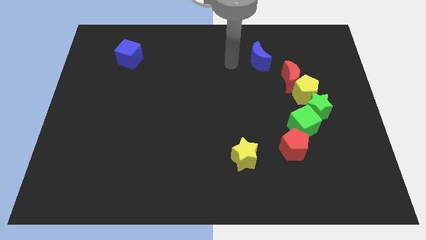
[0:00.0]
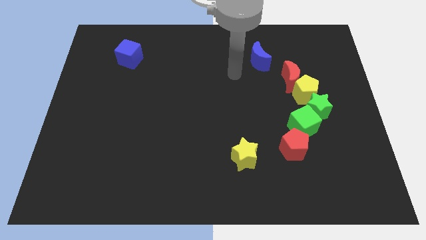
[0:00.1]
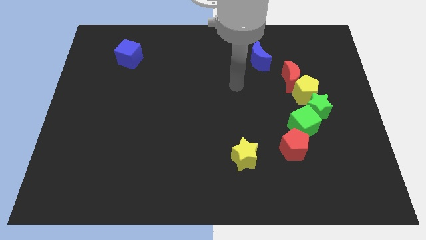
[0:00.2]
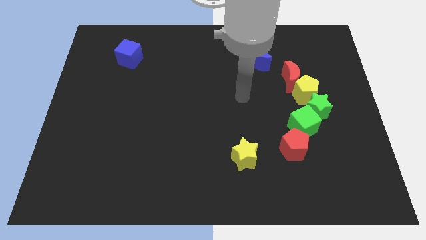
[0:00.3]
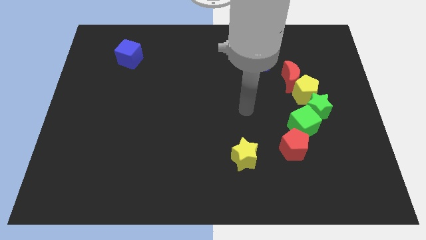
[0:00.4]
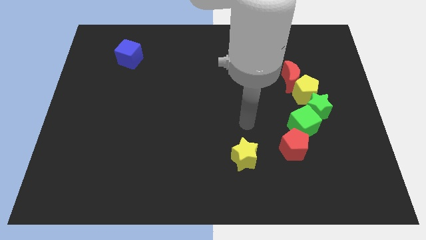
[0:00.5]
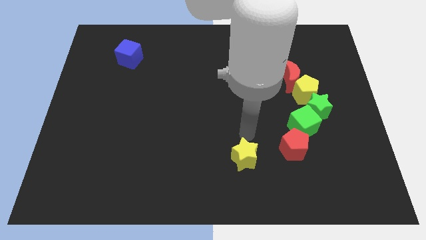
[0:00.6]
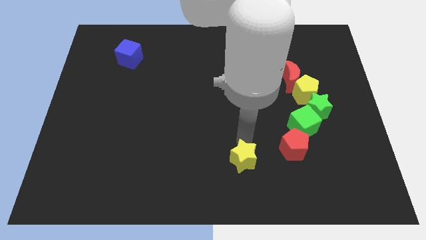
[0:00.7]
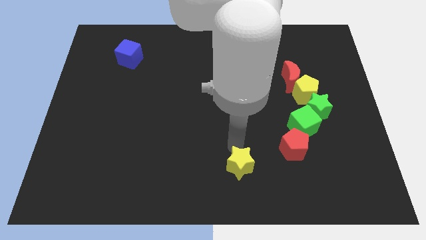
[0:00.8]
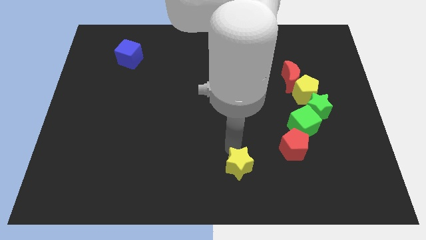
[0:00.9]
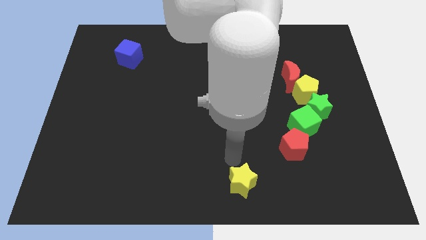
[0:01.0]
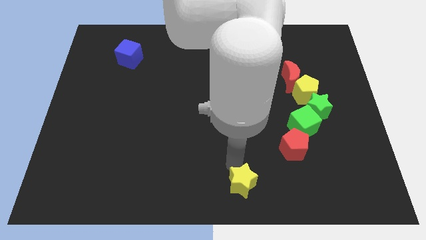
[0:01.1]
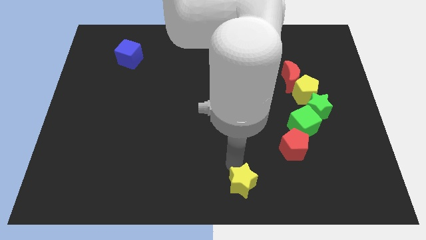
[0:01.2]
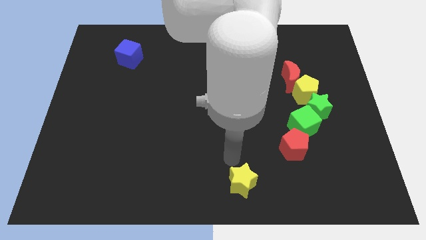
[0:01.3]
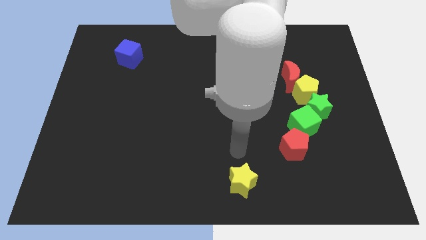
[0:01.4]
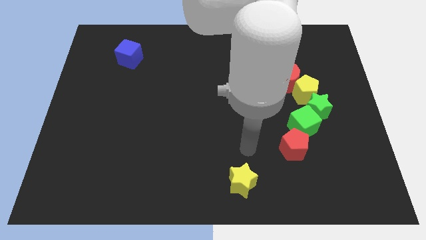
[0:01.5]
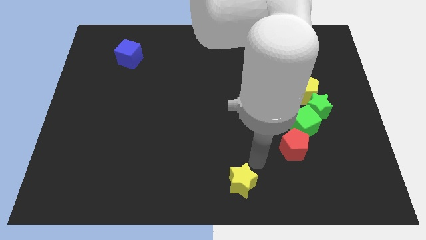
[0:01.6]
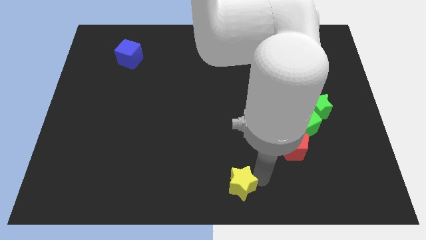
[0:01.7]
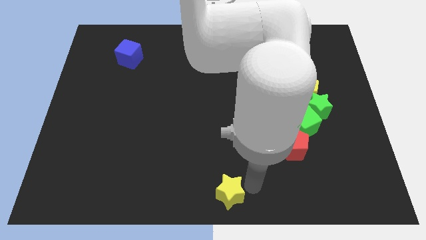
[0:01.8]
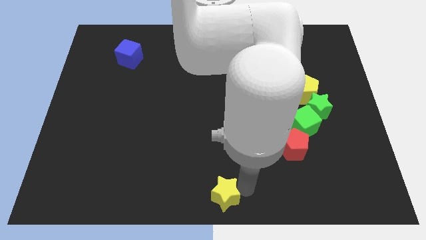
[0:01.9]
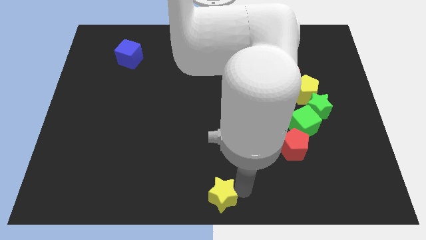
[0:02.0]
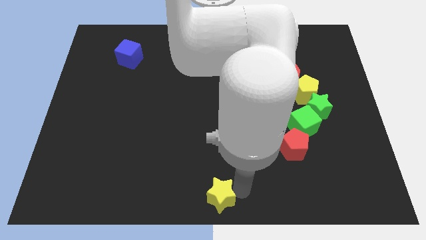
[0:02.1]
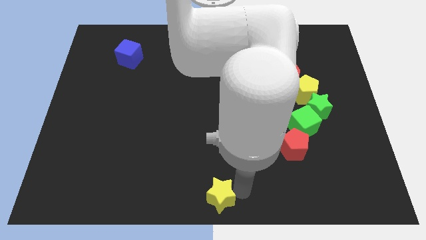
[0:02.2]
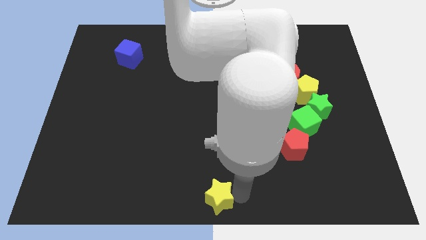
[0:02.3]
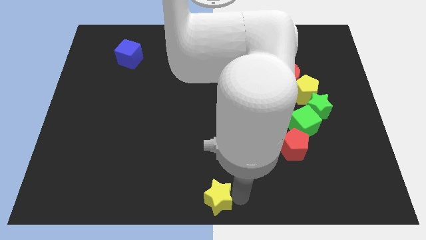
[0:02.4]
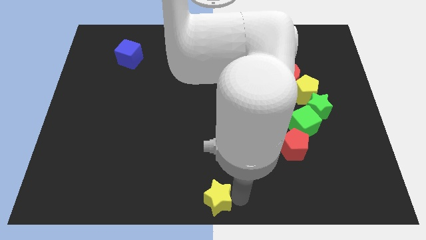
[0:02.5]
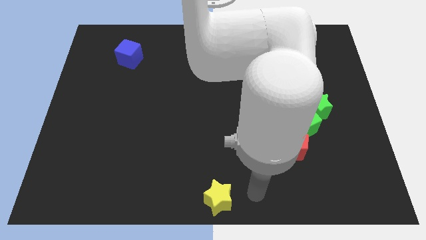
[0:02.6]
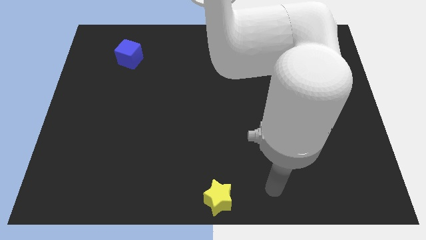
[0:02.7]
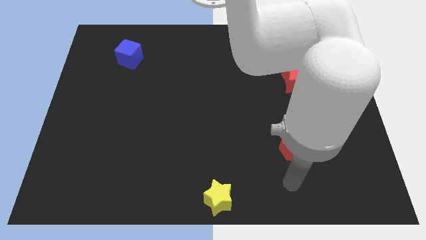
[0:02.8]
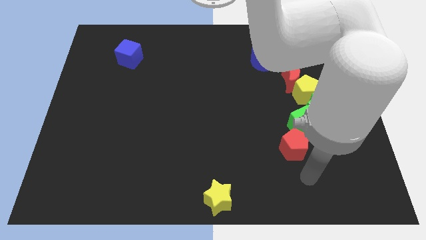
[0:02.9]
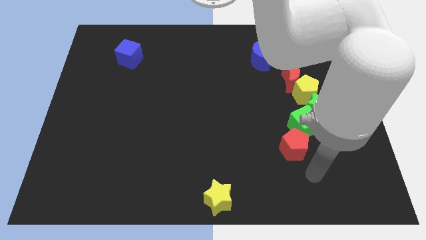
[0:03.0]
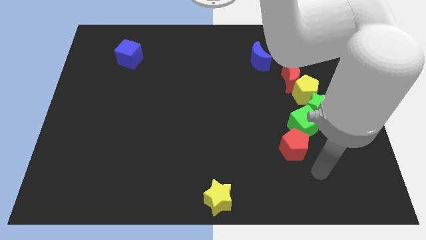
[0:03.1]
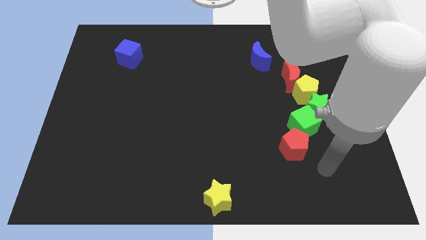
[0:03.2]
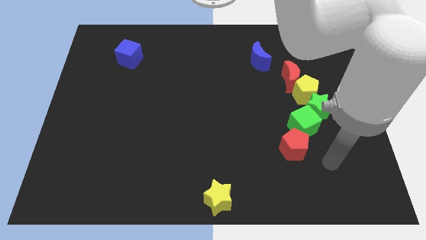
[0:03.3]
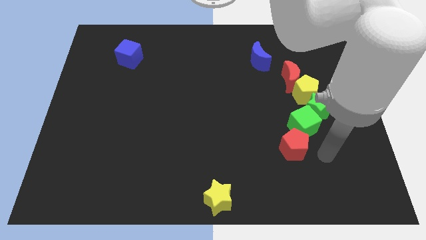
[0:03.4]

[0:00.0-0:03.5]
move yellow star towards bottom center

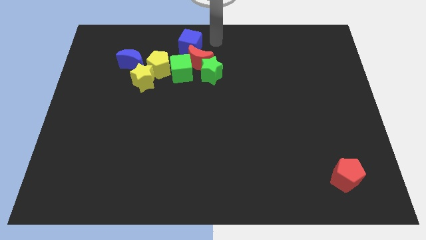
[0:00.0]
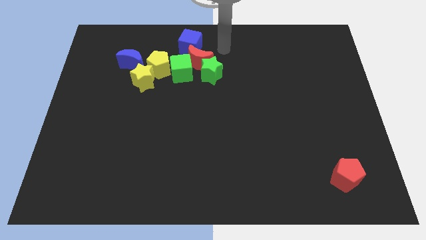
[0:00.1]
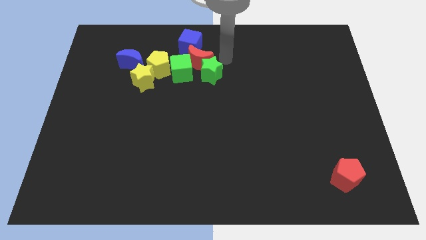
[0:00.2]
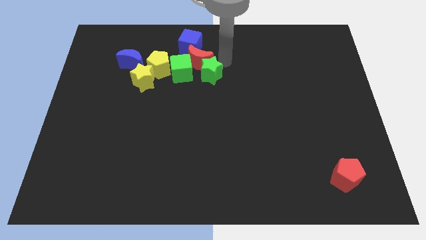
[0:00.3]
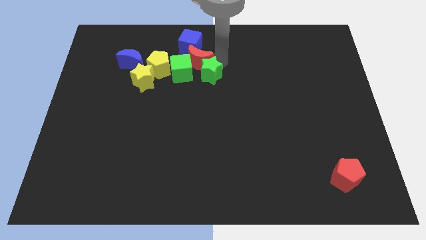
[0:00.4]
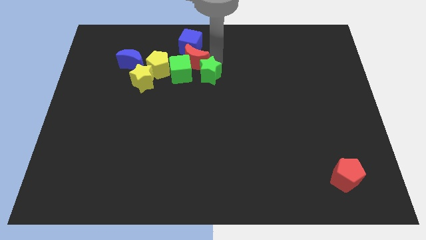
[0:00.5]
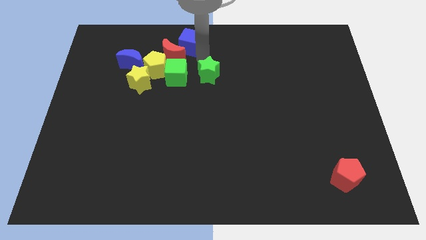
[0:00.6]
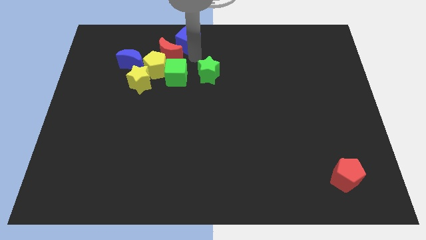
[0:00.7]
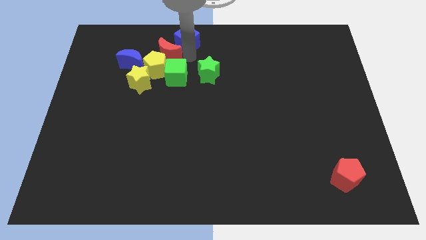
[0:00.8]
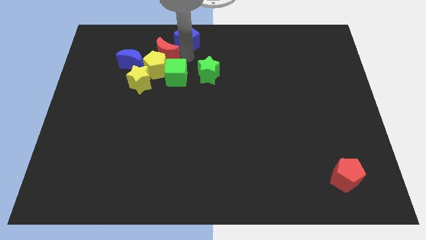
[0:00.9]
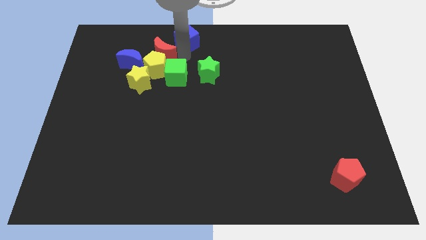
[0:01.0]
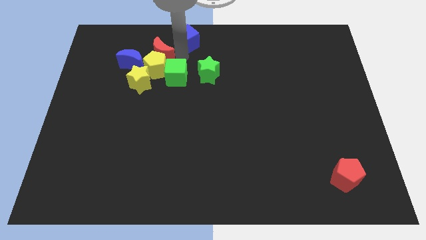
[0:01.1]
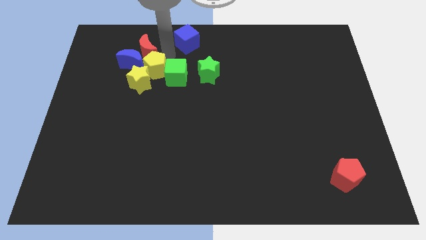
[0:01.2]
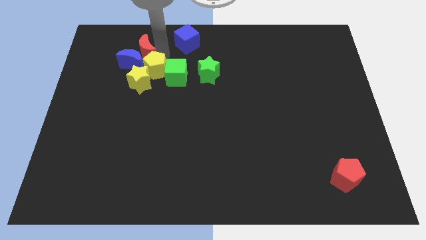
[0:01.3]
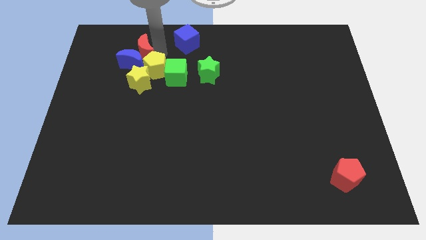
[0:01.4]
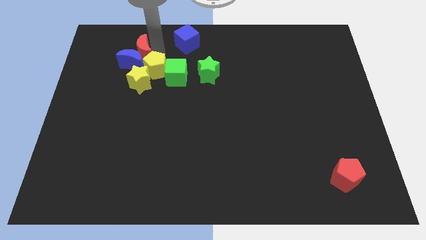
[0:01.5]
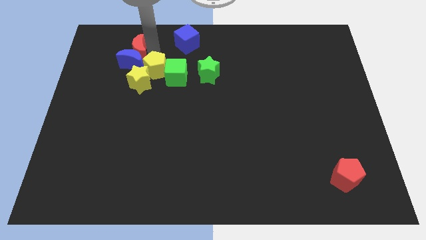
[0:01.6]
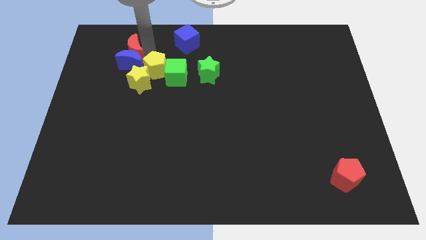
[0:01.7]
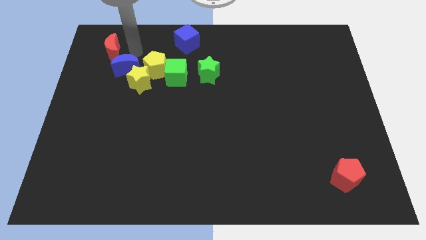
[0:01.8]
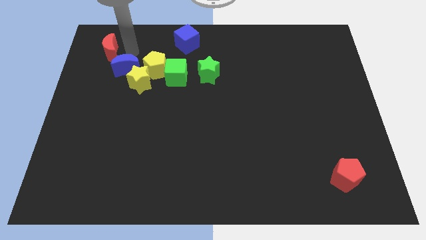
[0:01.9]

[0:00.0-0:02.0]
place the red crescent towards the top left side of the board

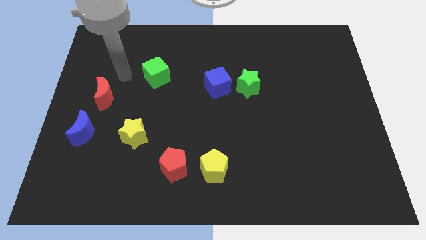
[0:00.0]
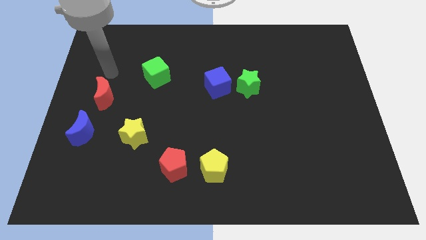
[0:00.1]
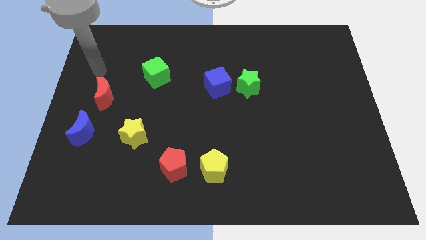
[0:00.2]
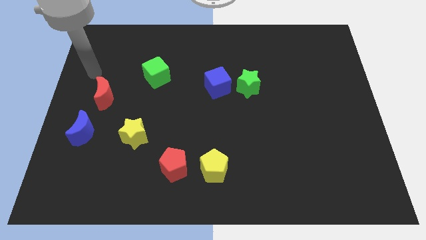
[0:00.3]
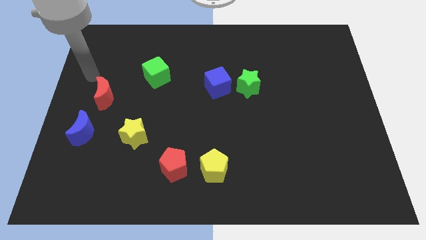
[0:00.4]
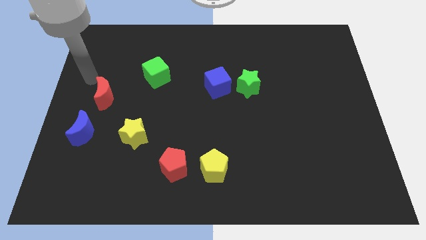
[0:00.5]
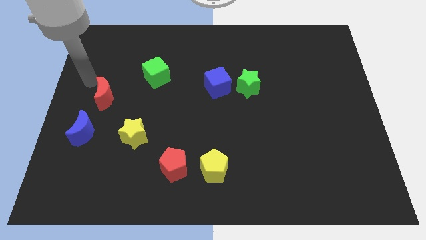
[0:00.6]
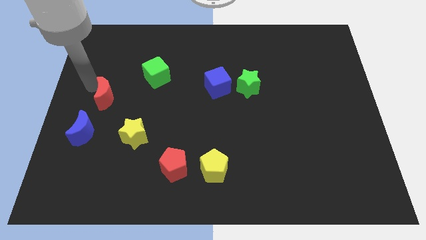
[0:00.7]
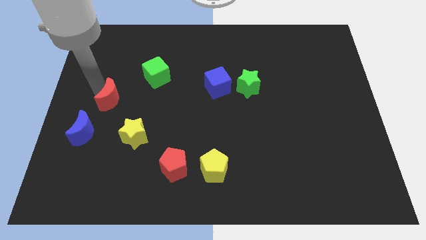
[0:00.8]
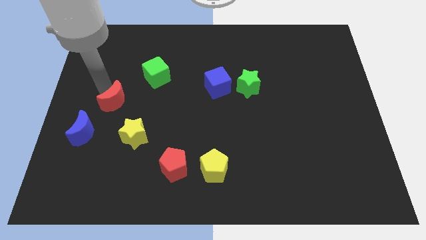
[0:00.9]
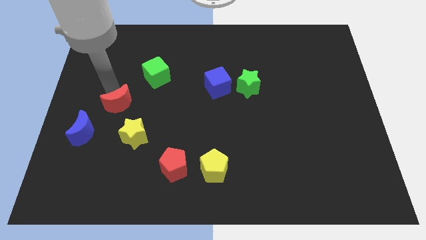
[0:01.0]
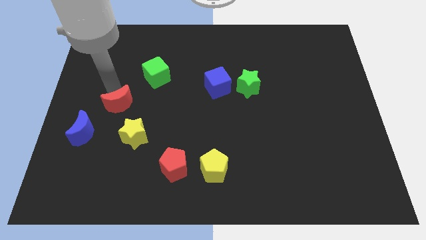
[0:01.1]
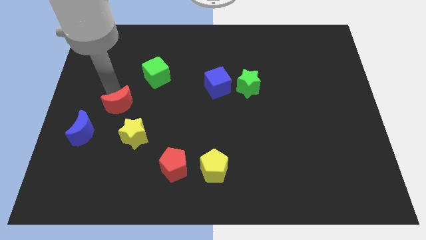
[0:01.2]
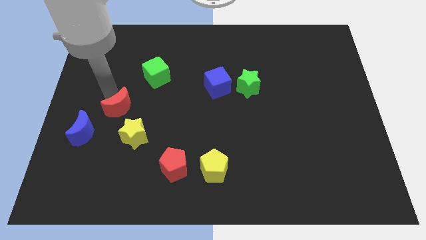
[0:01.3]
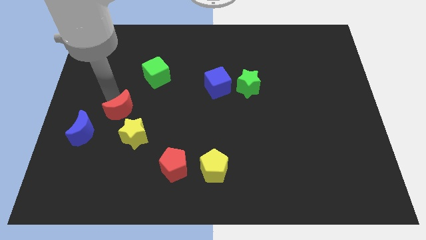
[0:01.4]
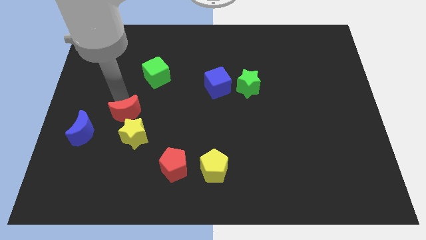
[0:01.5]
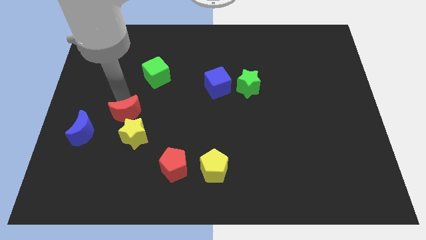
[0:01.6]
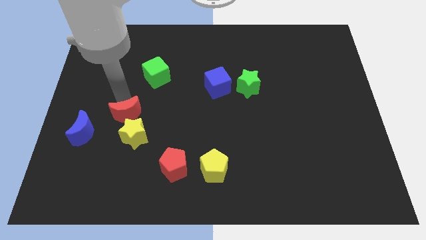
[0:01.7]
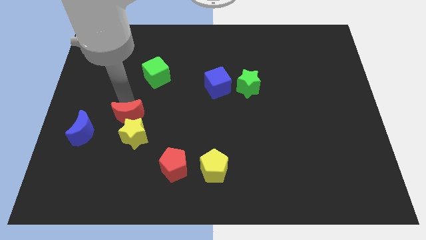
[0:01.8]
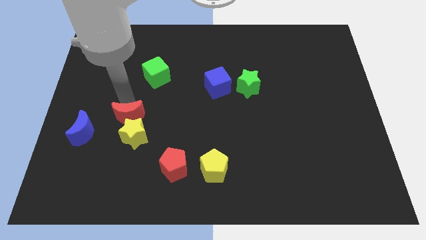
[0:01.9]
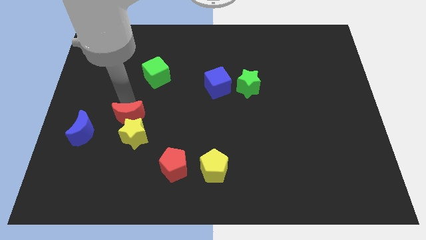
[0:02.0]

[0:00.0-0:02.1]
move red moon into yellow star

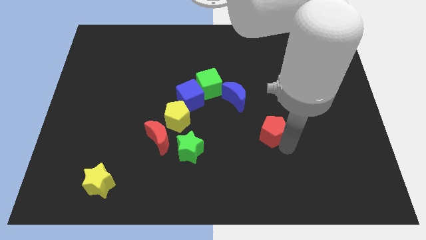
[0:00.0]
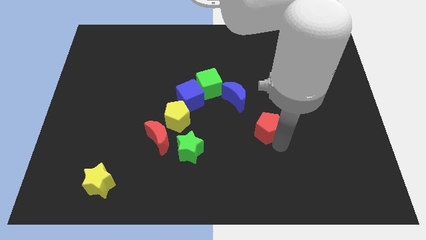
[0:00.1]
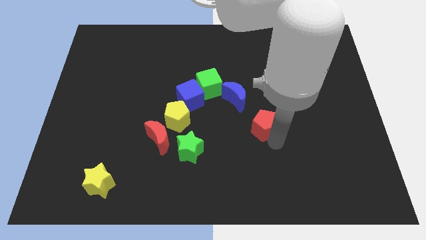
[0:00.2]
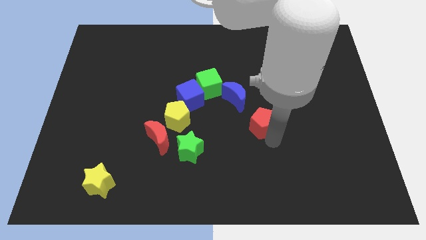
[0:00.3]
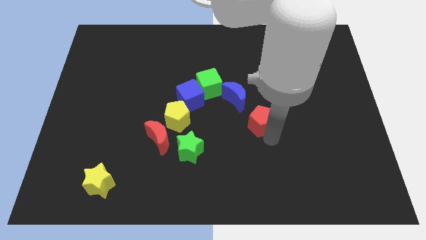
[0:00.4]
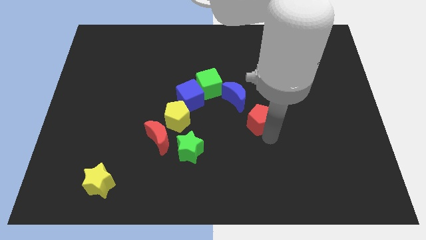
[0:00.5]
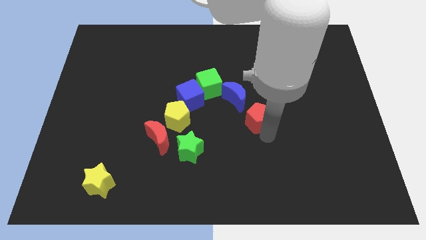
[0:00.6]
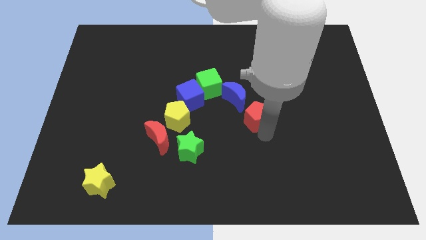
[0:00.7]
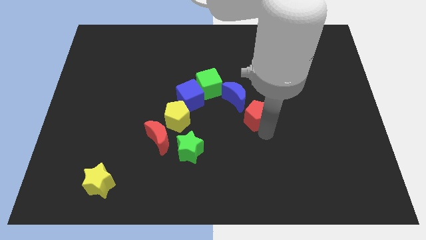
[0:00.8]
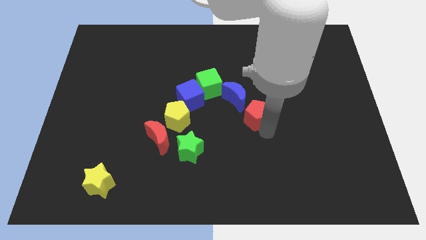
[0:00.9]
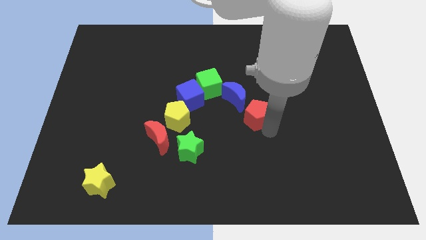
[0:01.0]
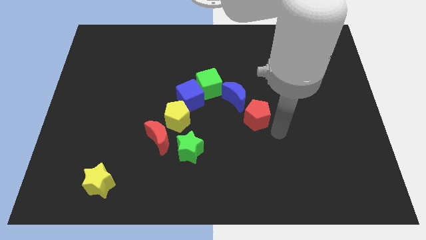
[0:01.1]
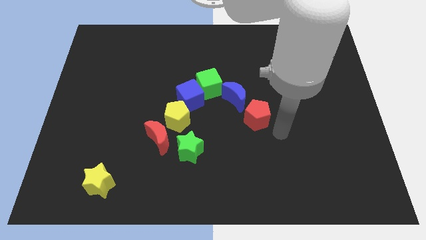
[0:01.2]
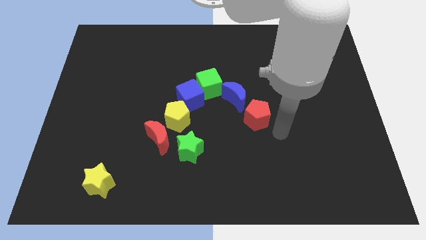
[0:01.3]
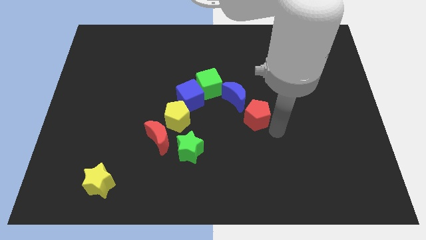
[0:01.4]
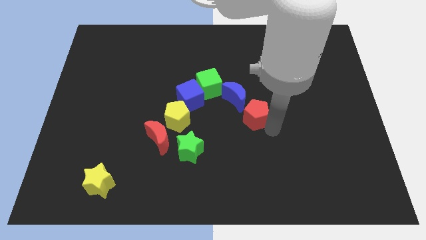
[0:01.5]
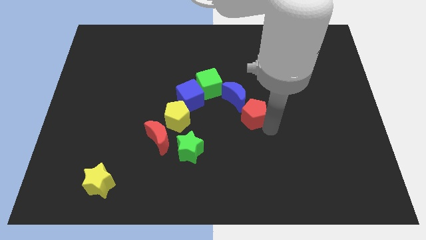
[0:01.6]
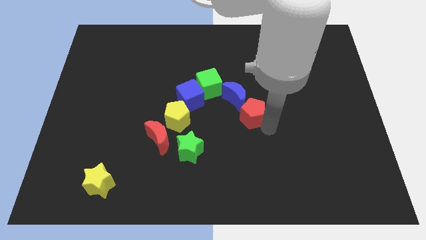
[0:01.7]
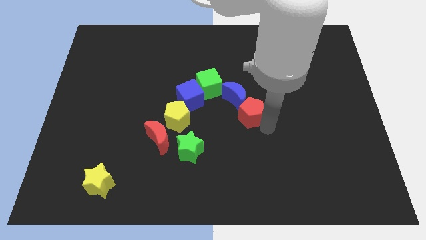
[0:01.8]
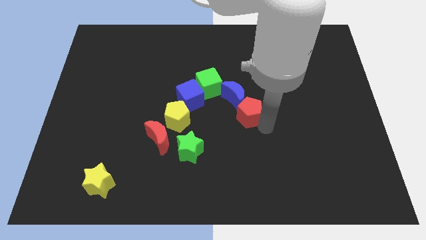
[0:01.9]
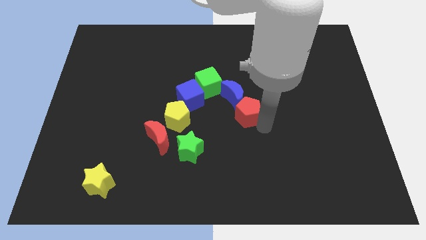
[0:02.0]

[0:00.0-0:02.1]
move the red pentagon into the right bottom side of the blue crescent
